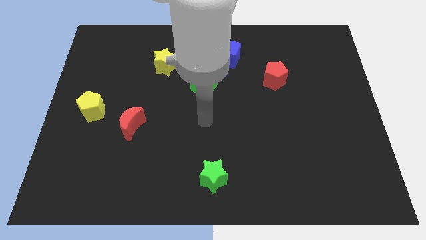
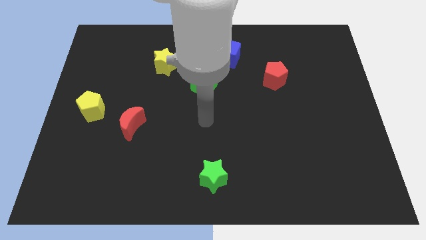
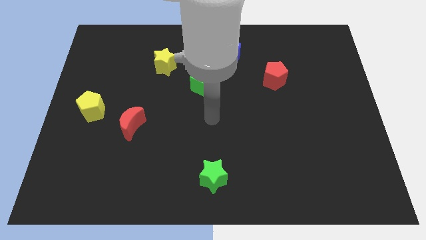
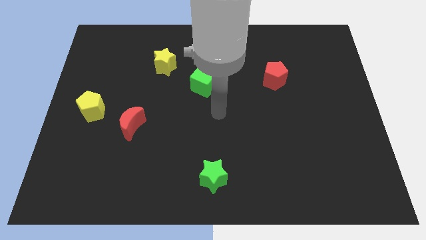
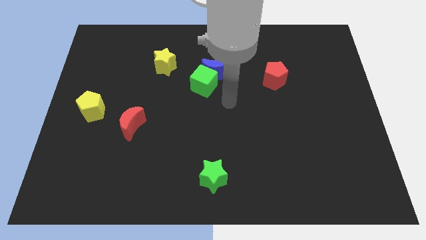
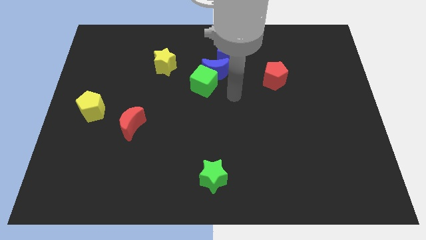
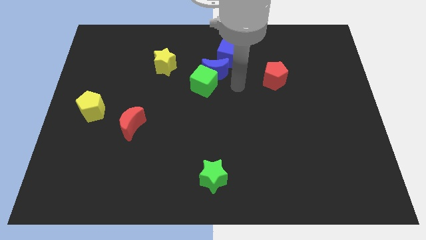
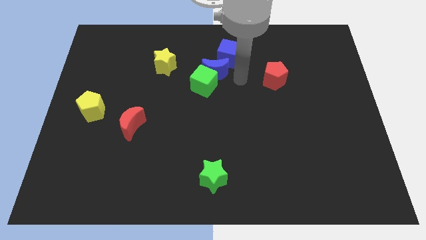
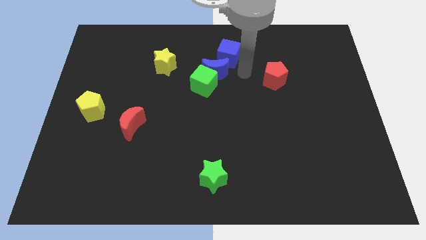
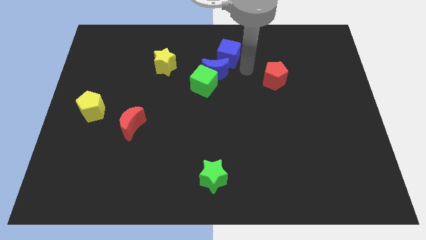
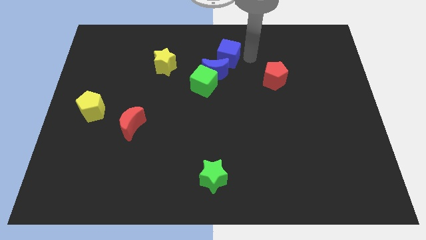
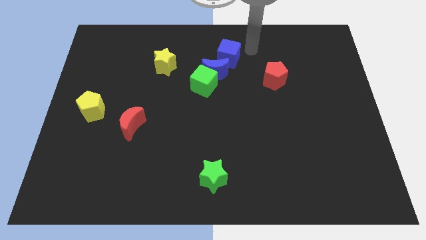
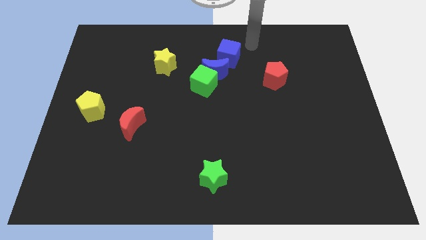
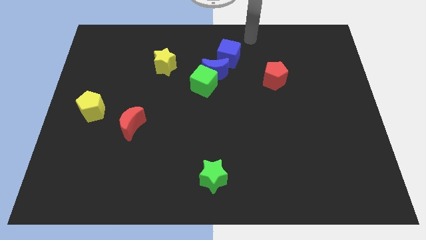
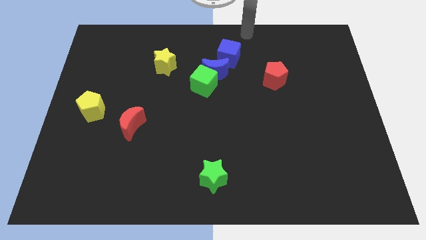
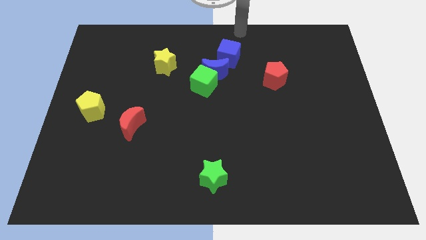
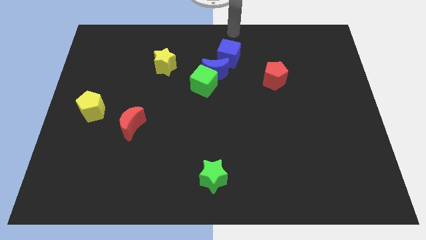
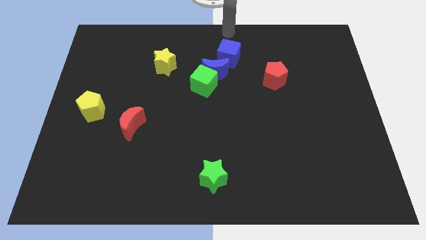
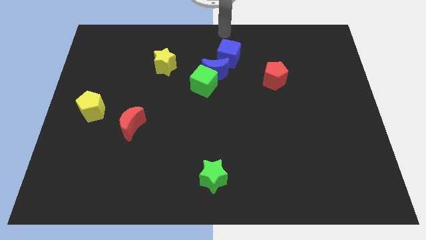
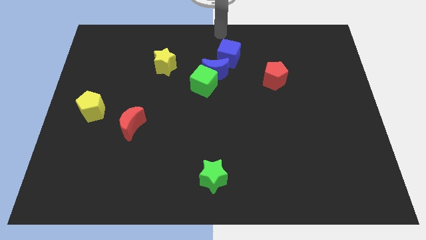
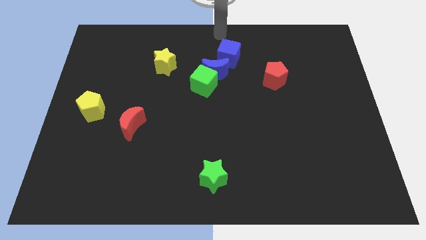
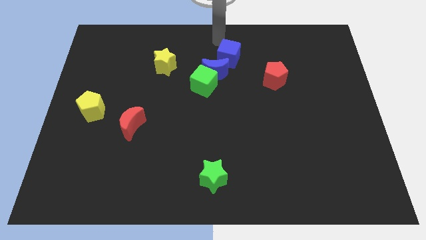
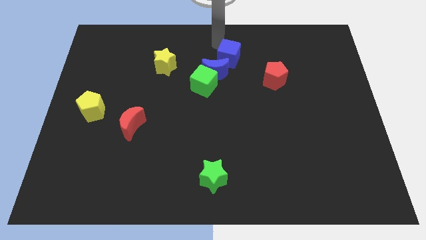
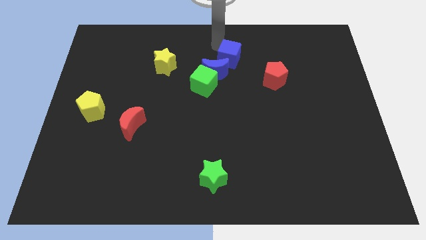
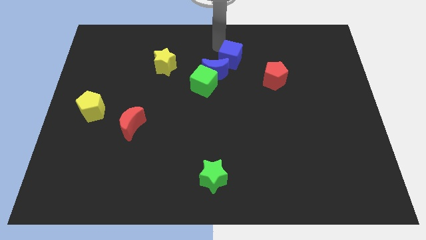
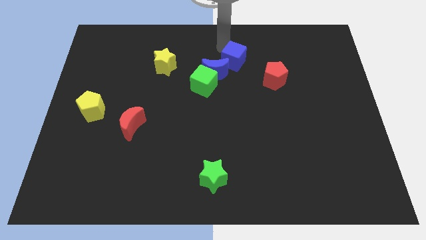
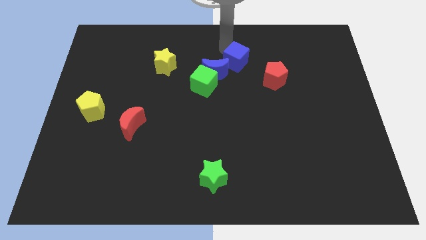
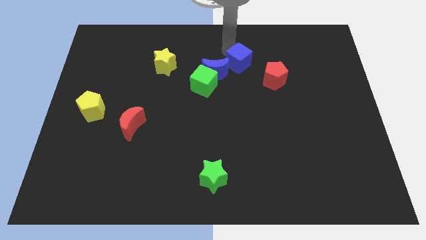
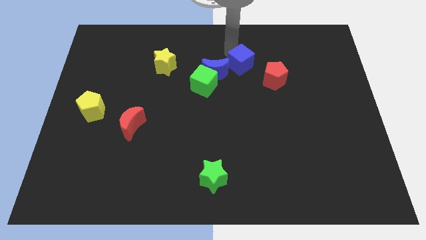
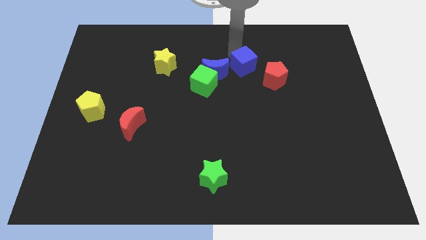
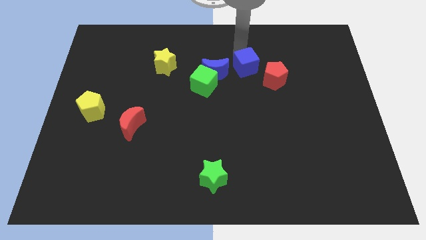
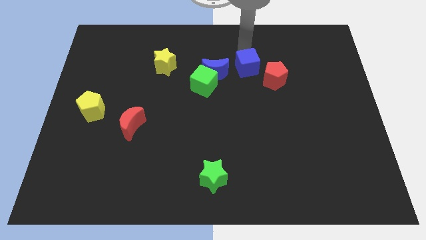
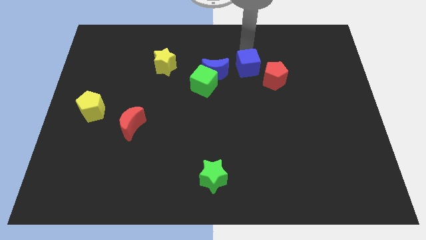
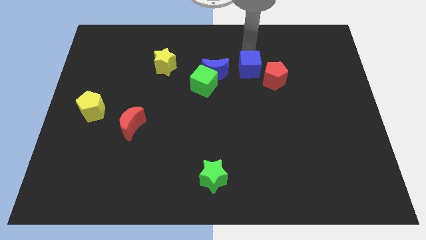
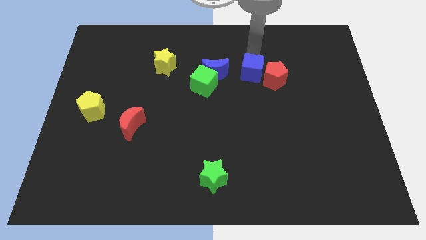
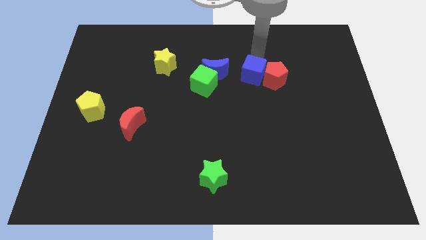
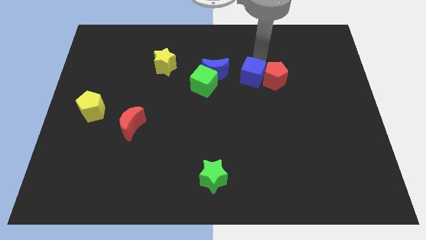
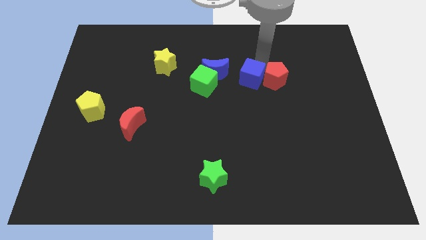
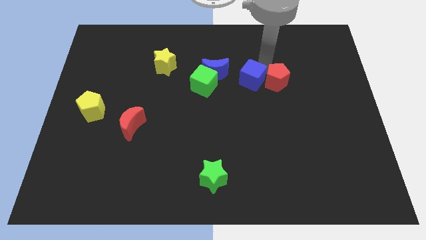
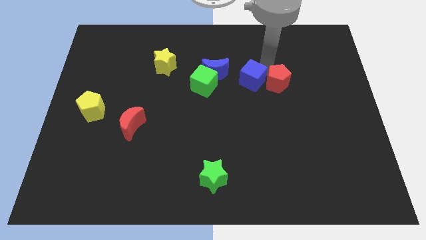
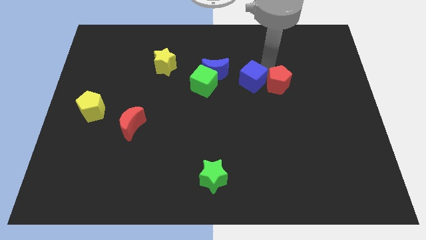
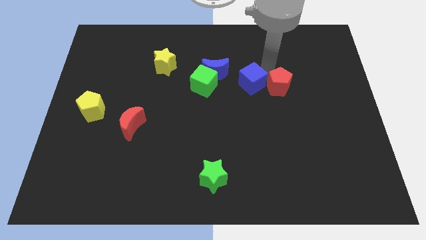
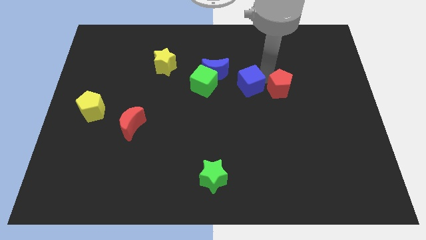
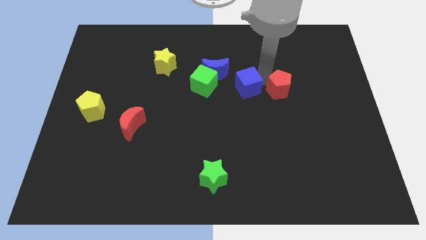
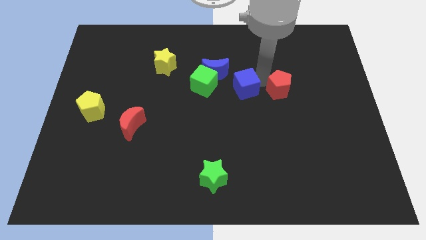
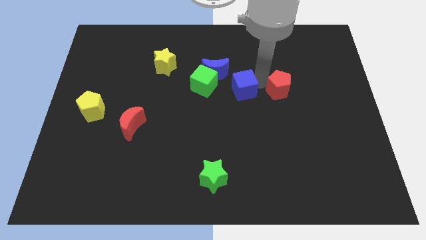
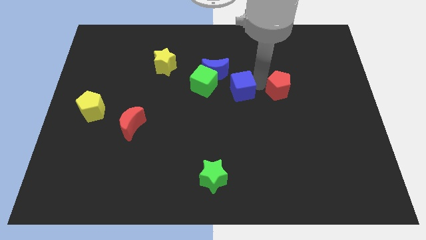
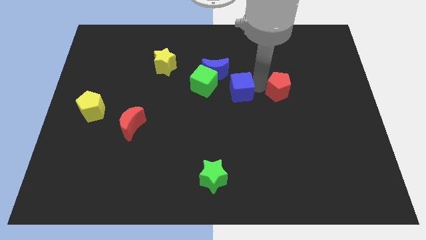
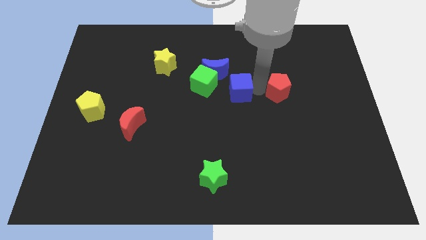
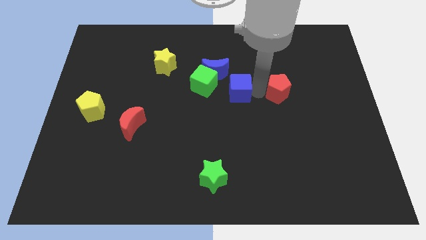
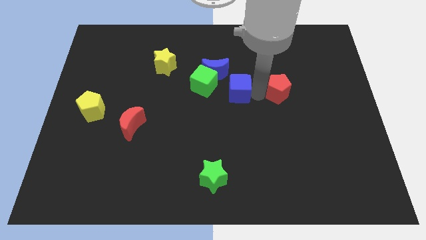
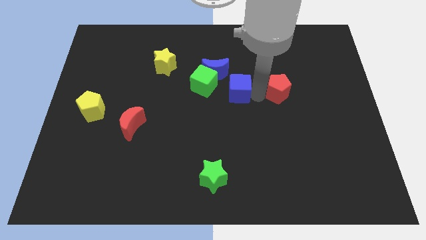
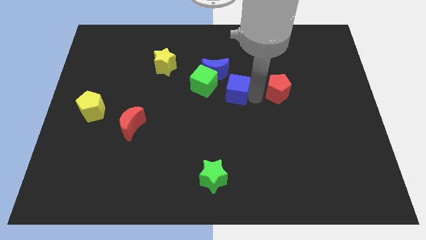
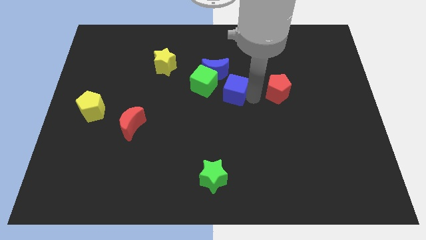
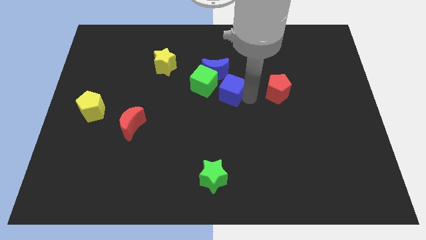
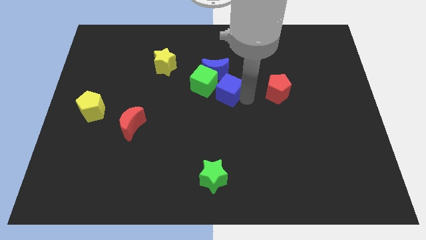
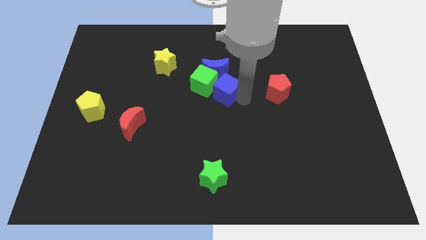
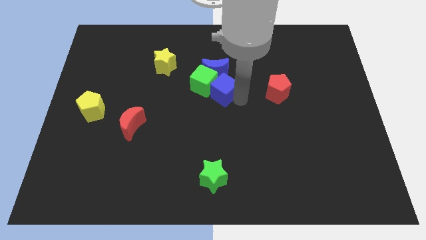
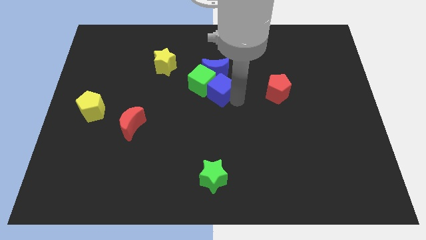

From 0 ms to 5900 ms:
slide the blue cube close to the green cube

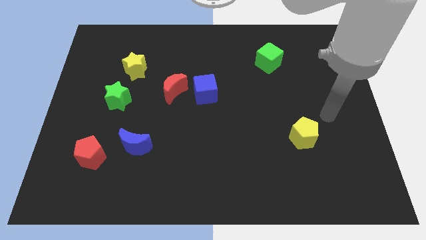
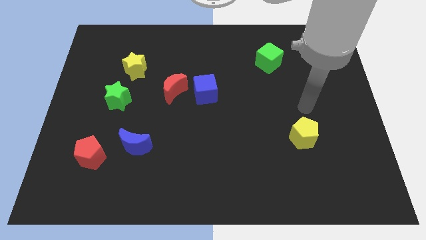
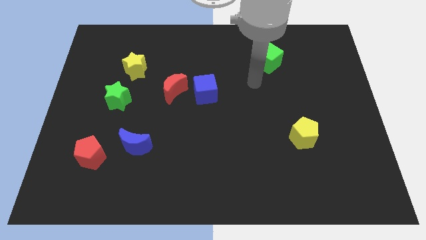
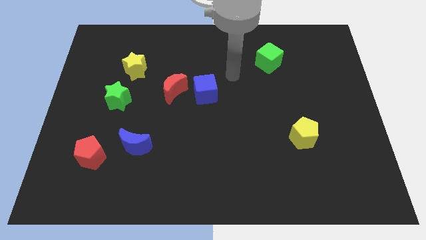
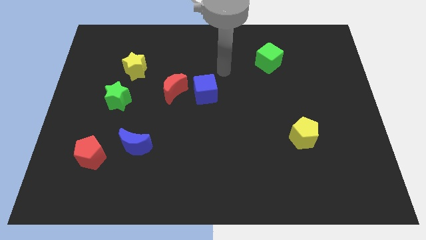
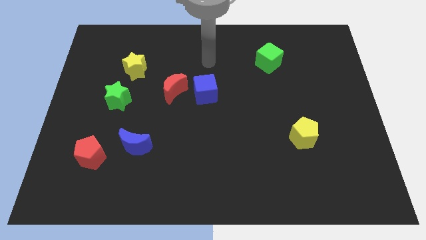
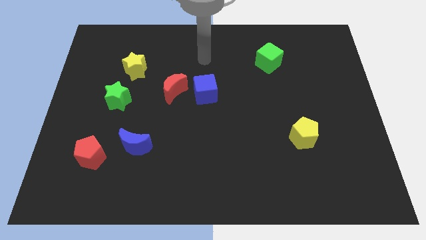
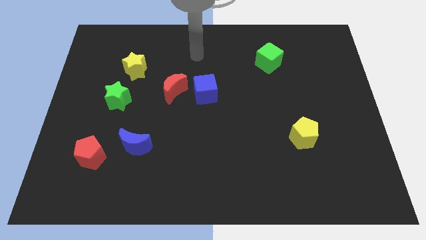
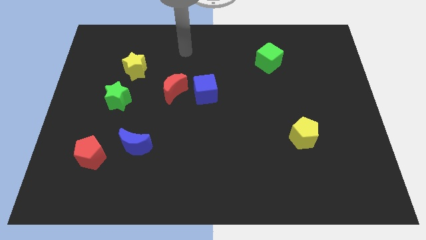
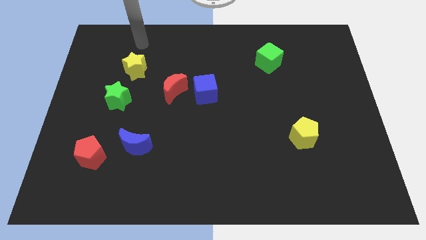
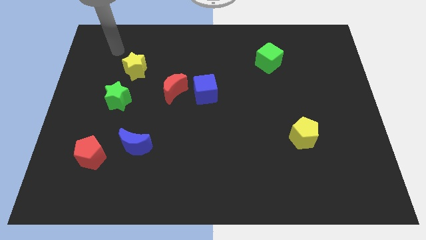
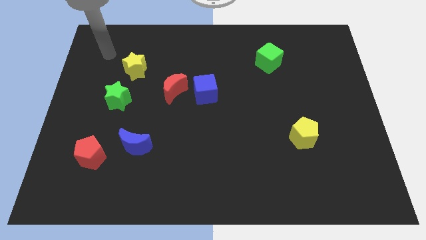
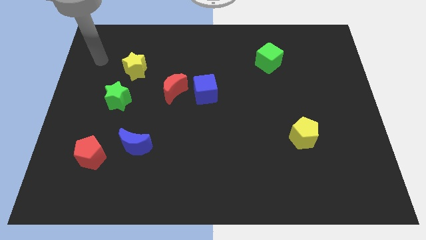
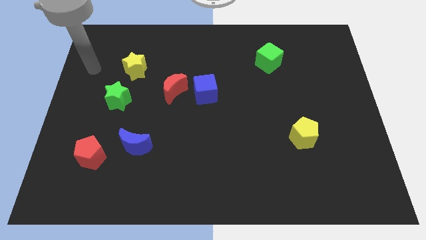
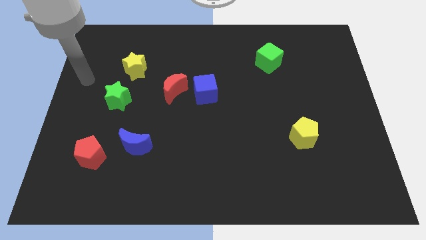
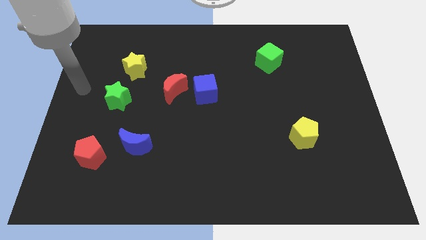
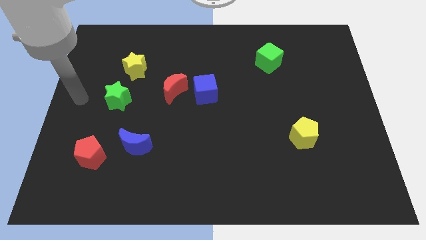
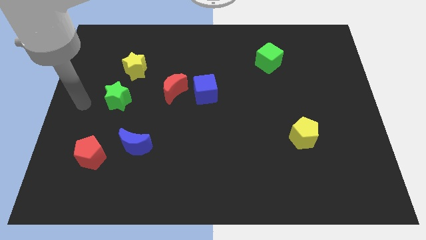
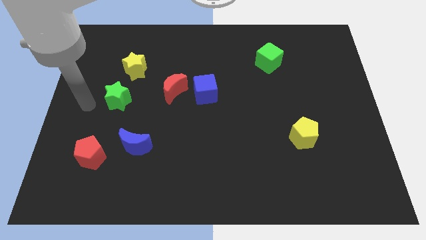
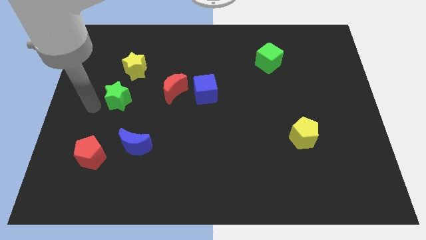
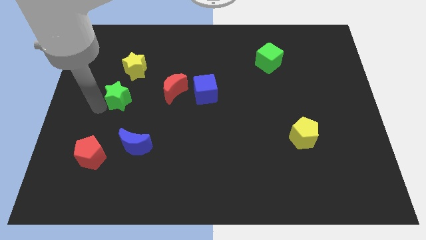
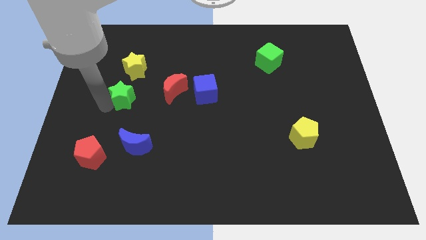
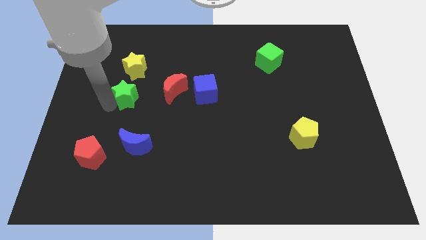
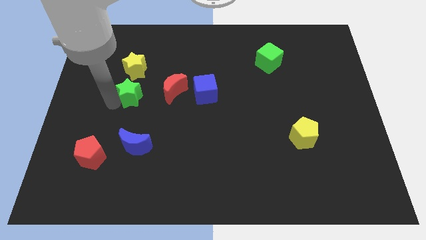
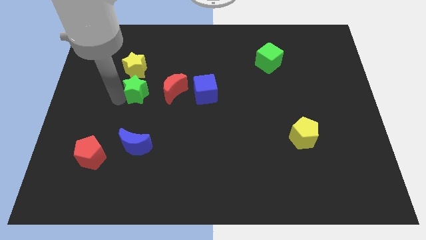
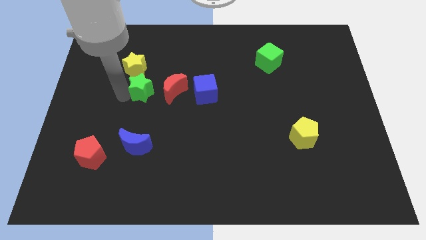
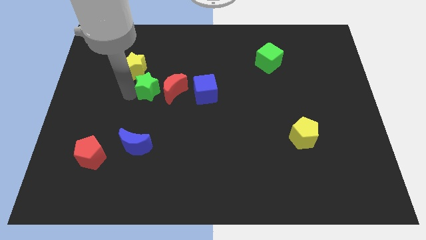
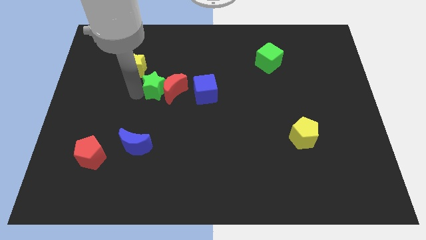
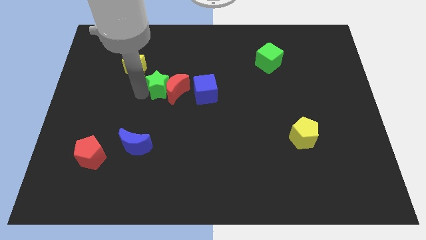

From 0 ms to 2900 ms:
slide the green star towards the red moon
